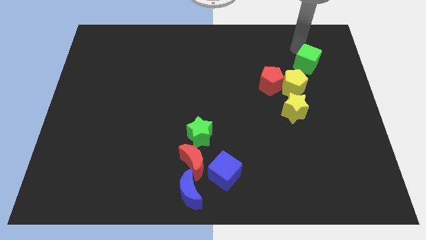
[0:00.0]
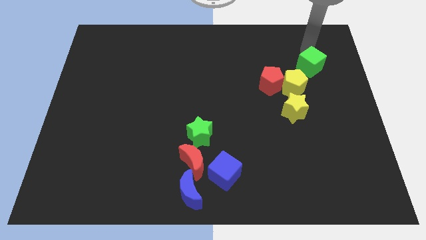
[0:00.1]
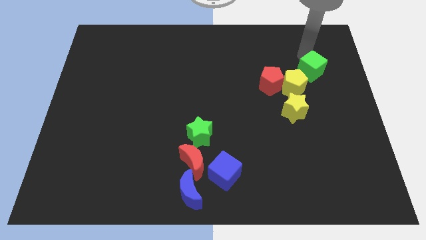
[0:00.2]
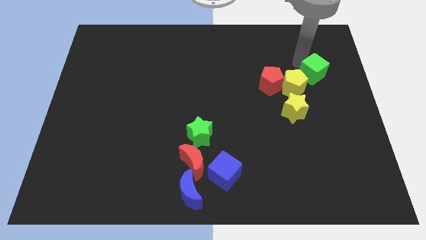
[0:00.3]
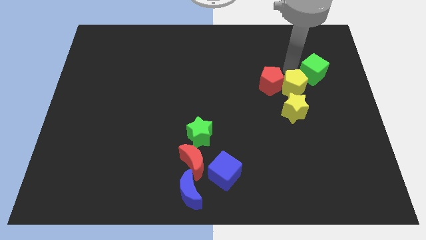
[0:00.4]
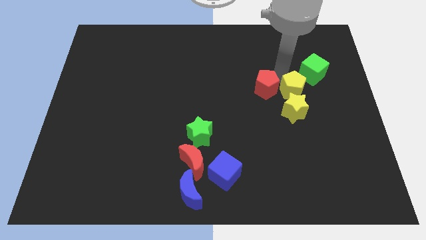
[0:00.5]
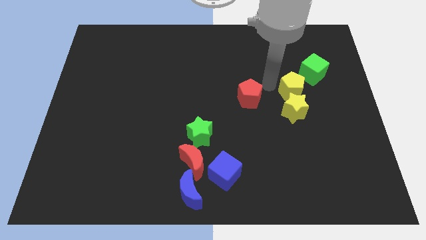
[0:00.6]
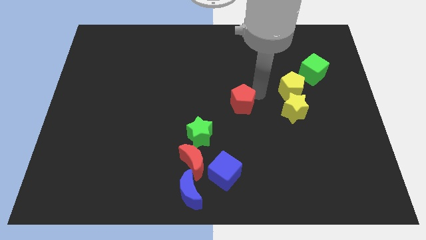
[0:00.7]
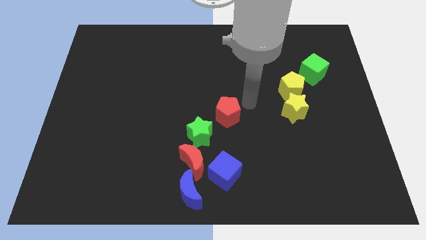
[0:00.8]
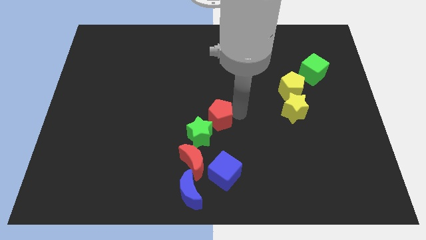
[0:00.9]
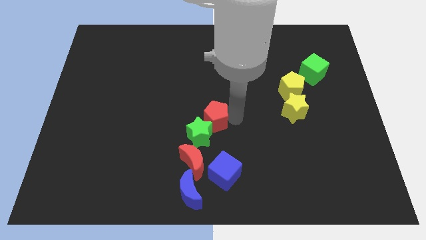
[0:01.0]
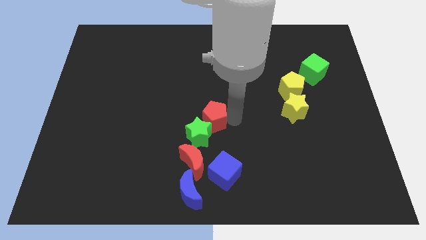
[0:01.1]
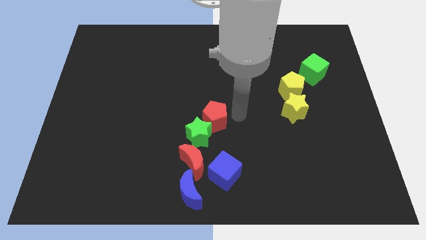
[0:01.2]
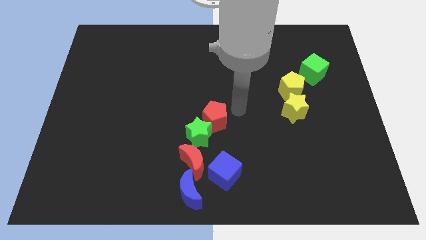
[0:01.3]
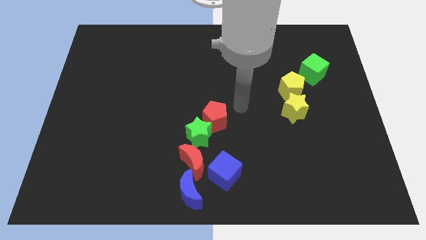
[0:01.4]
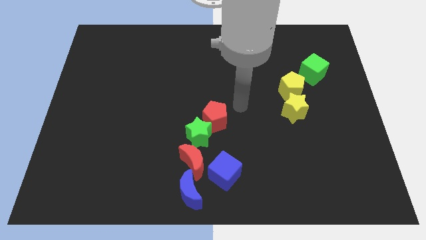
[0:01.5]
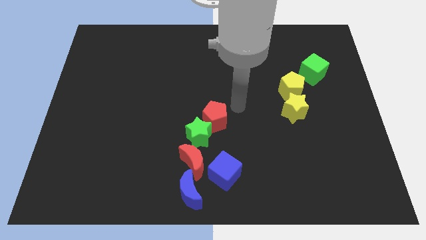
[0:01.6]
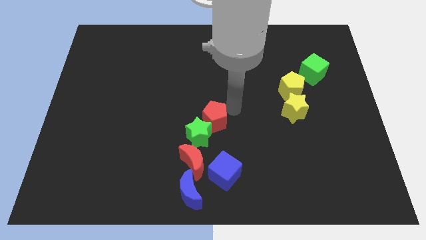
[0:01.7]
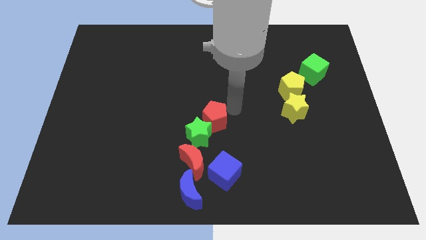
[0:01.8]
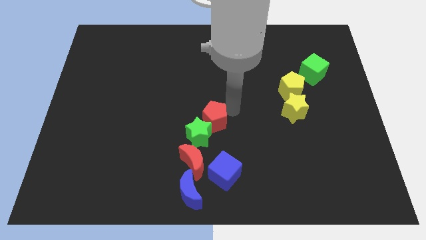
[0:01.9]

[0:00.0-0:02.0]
place the red pentagon at the top of the green star

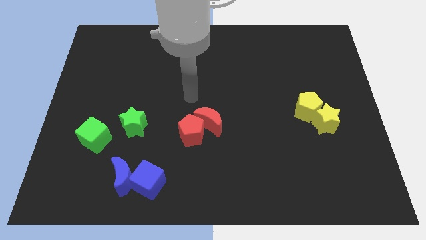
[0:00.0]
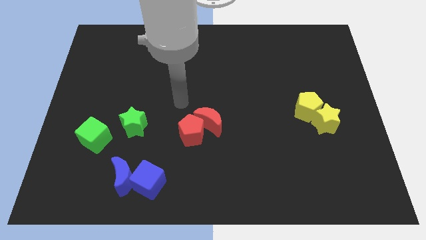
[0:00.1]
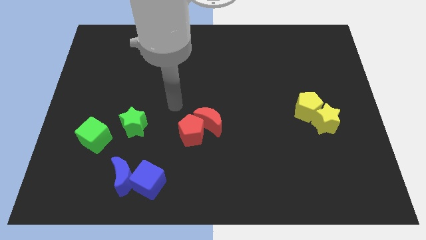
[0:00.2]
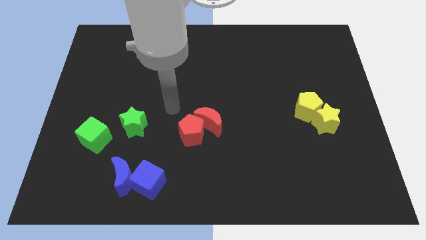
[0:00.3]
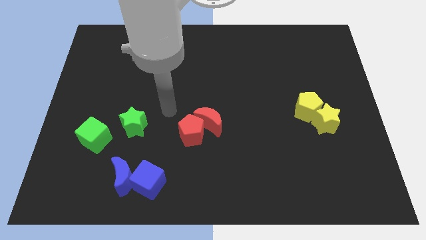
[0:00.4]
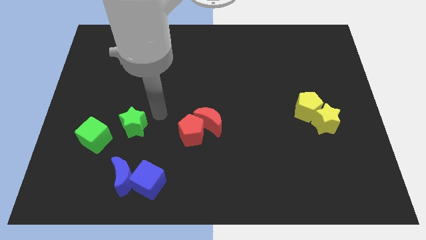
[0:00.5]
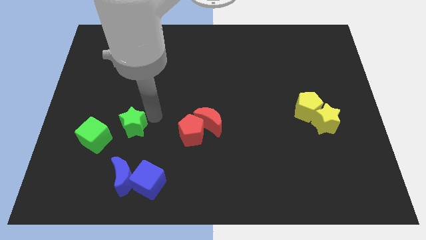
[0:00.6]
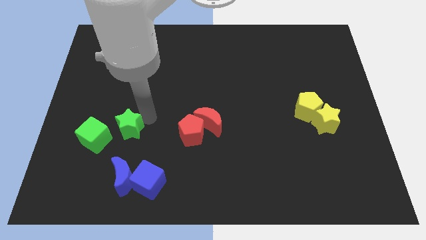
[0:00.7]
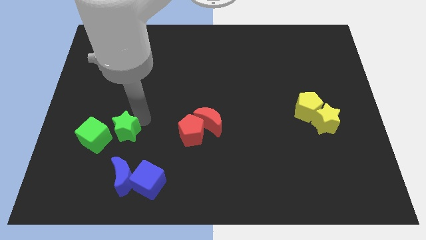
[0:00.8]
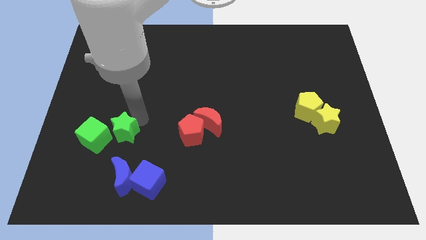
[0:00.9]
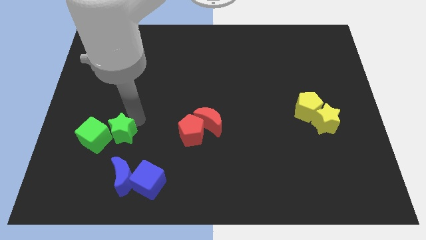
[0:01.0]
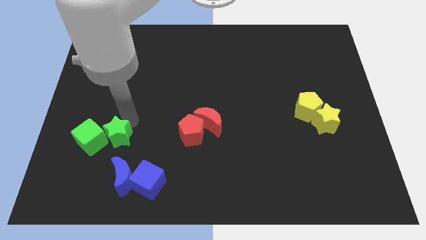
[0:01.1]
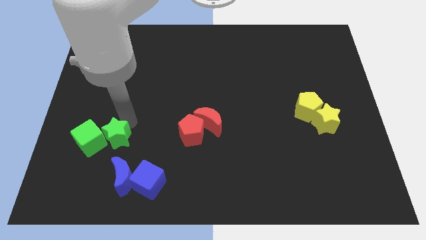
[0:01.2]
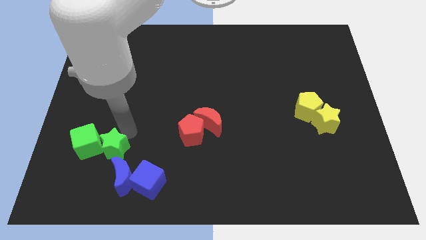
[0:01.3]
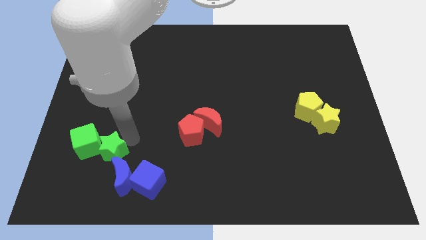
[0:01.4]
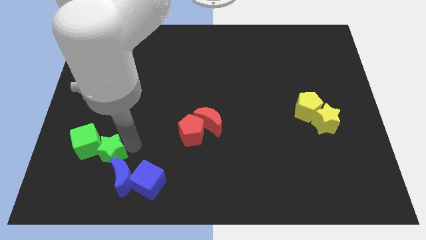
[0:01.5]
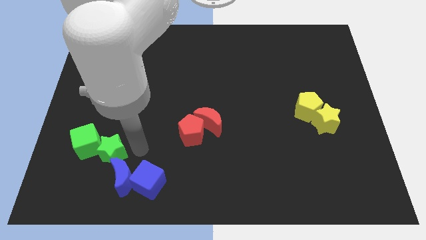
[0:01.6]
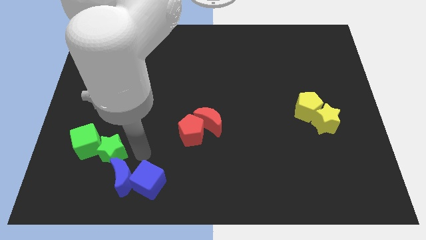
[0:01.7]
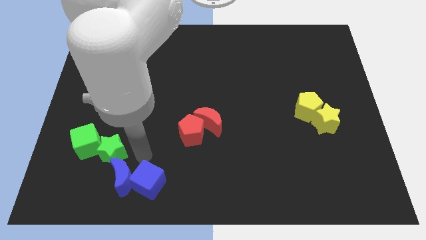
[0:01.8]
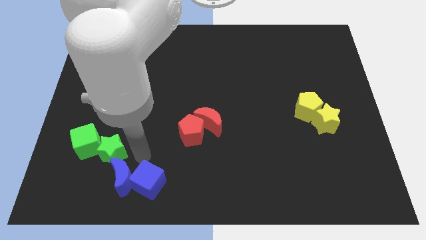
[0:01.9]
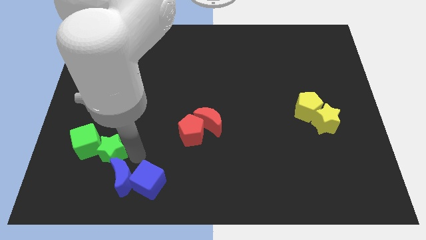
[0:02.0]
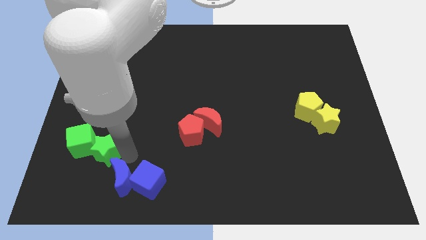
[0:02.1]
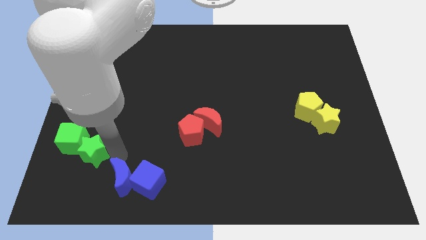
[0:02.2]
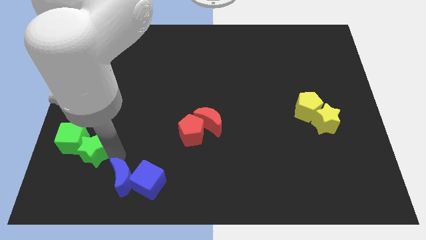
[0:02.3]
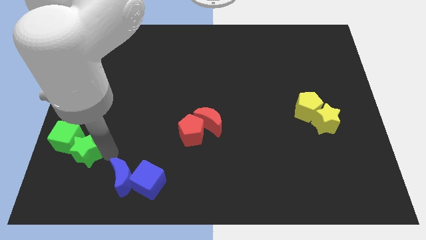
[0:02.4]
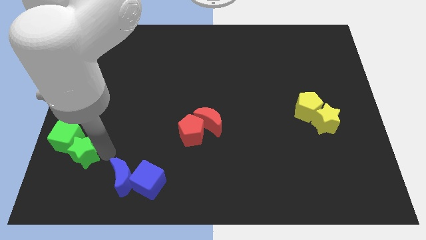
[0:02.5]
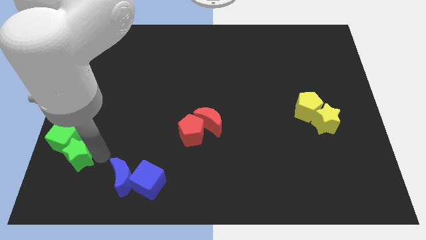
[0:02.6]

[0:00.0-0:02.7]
push the green star into green cube

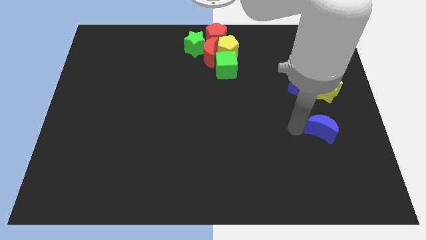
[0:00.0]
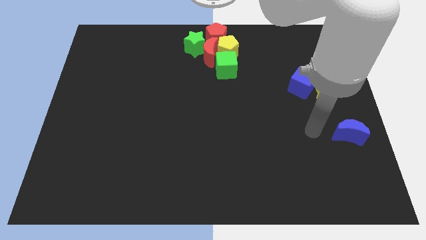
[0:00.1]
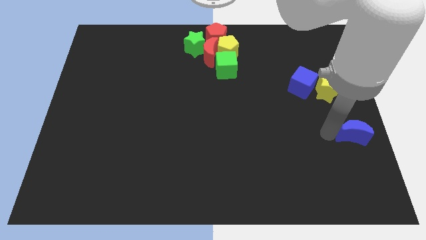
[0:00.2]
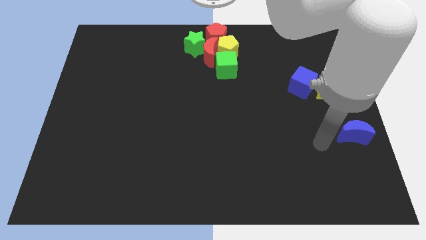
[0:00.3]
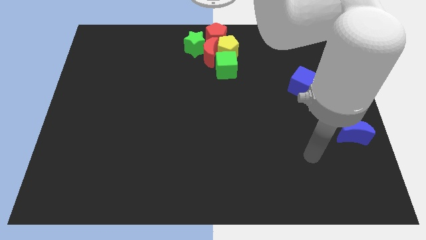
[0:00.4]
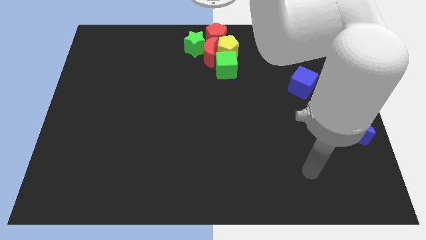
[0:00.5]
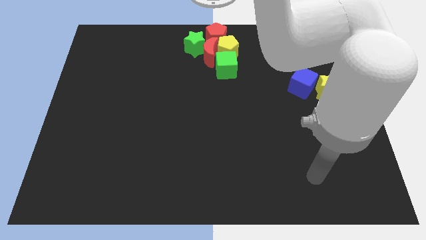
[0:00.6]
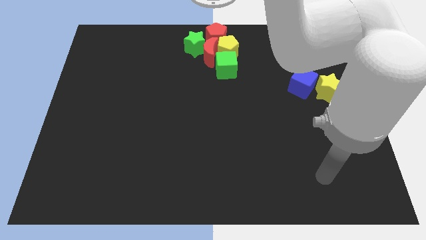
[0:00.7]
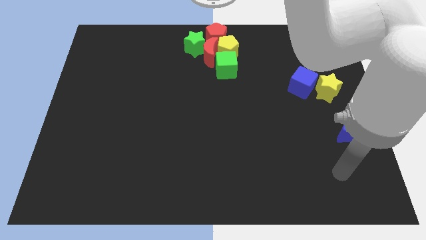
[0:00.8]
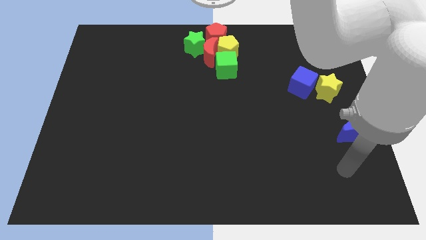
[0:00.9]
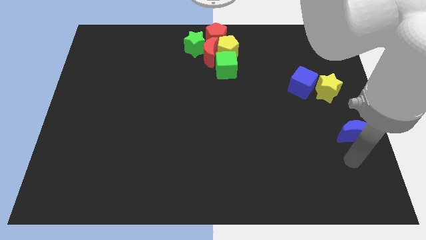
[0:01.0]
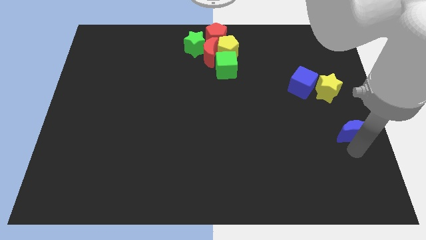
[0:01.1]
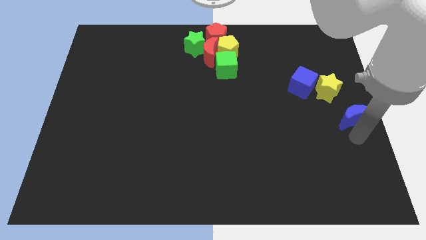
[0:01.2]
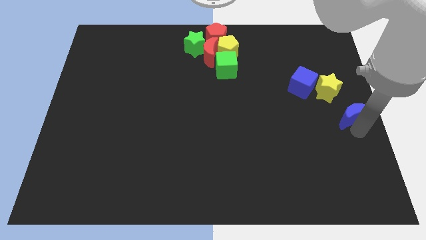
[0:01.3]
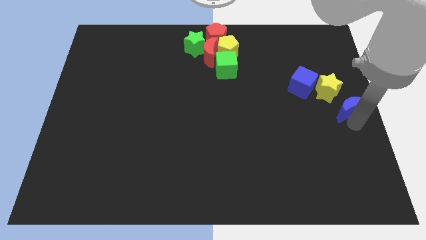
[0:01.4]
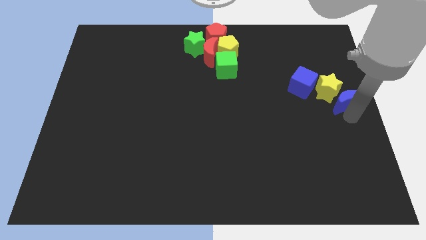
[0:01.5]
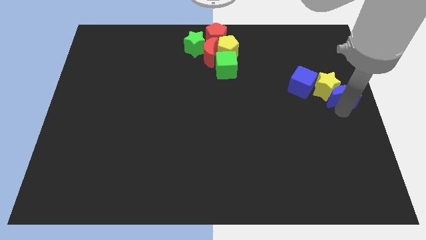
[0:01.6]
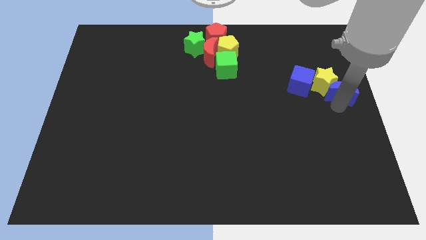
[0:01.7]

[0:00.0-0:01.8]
move the blue moon into the bottom right side of the yellow star

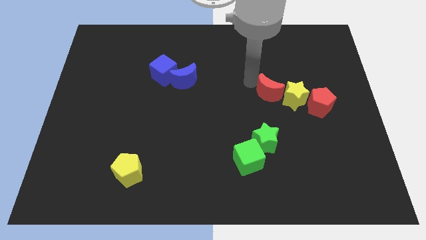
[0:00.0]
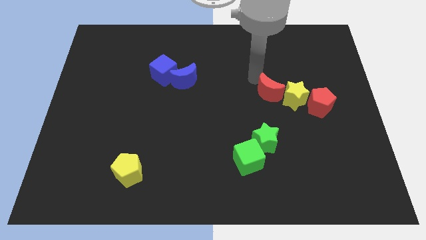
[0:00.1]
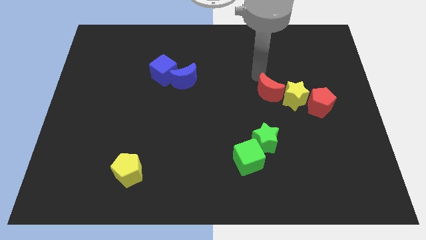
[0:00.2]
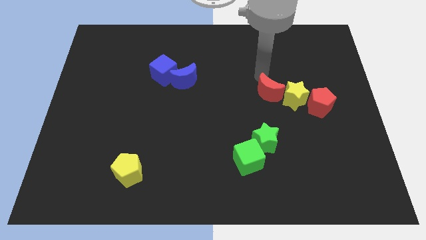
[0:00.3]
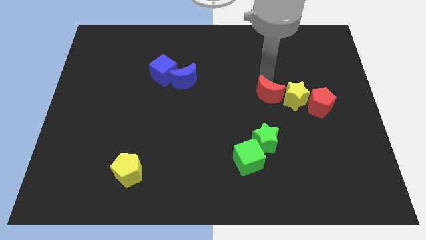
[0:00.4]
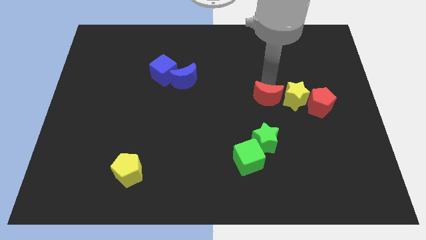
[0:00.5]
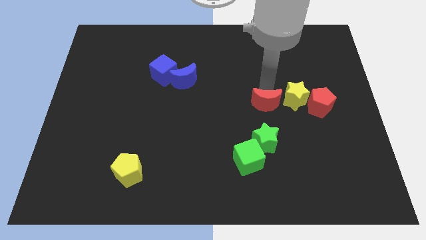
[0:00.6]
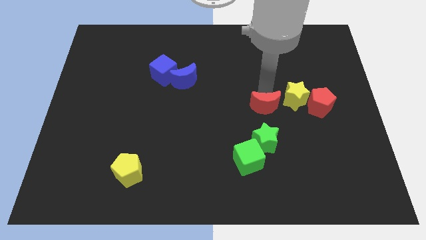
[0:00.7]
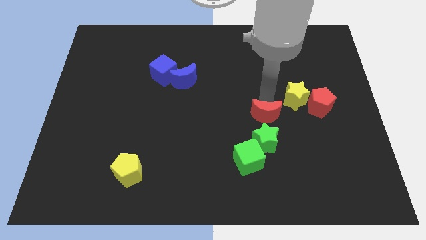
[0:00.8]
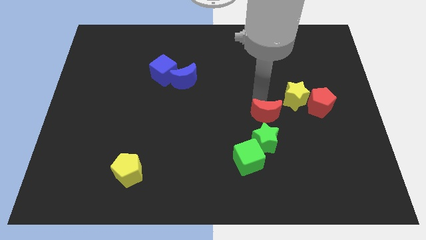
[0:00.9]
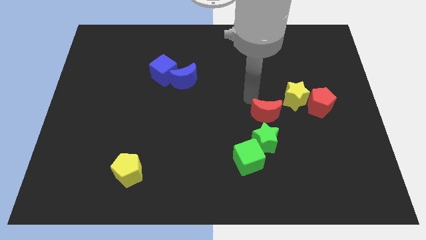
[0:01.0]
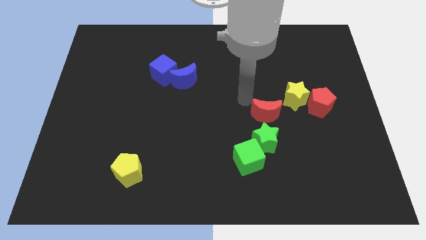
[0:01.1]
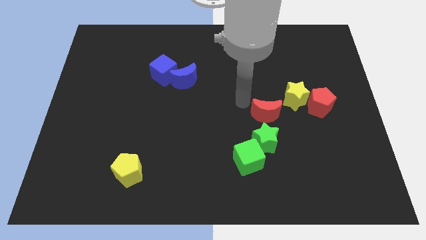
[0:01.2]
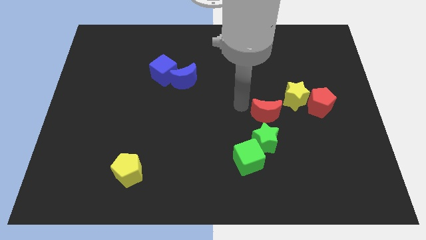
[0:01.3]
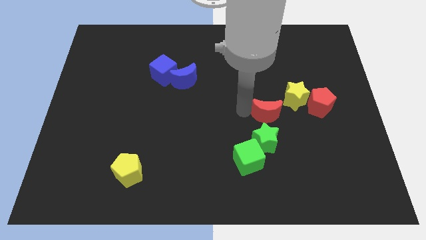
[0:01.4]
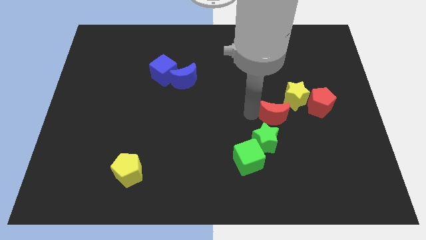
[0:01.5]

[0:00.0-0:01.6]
move red crescent towards the green star

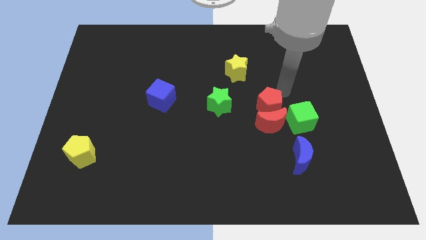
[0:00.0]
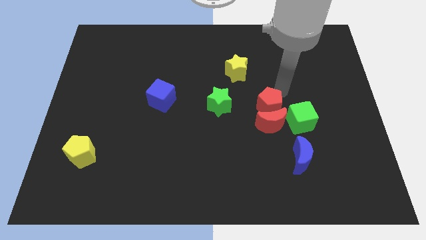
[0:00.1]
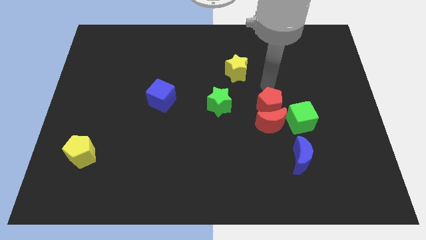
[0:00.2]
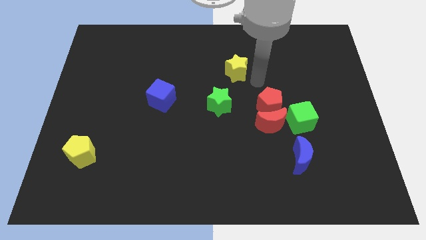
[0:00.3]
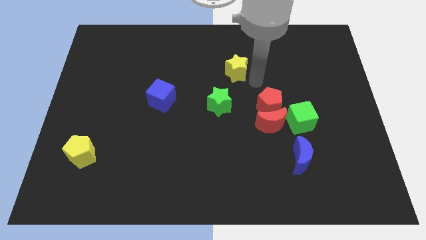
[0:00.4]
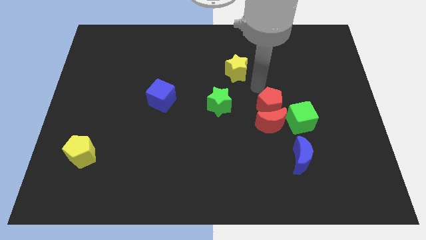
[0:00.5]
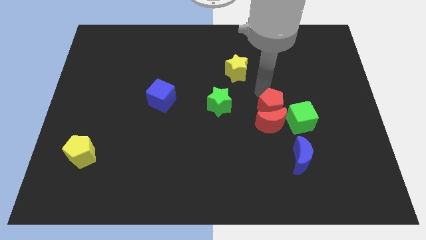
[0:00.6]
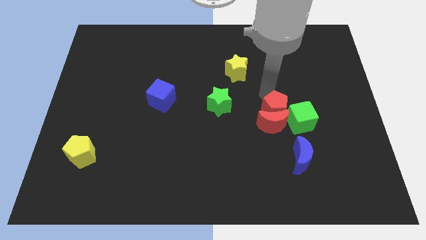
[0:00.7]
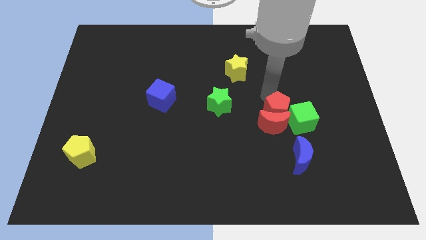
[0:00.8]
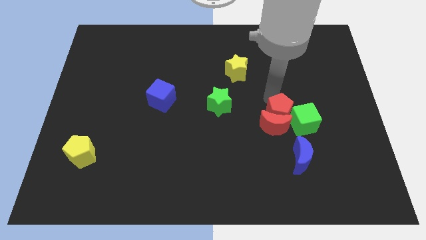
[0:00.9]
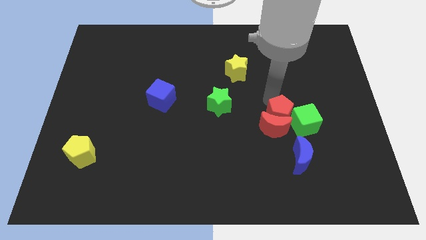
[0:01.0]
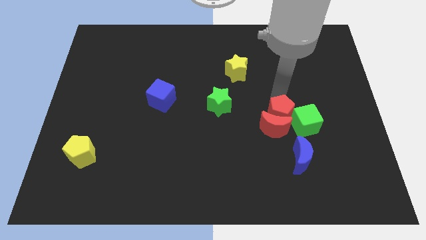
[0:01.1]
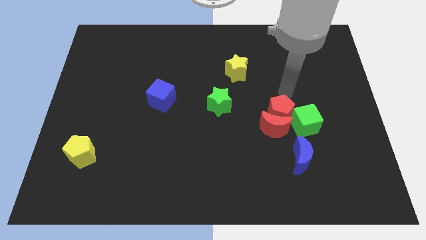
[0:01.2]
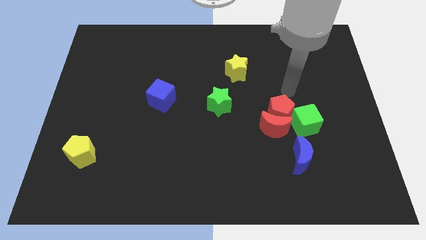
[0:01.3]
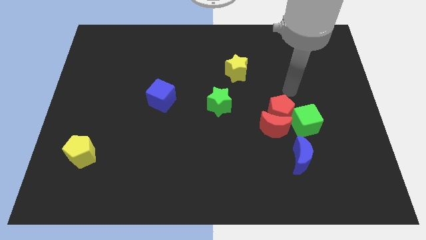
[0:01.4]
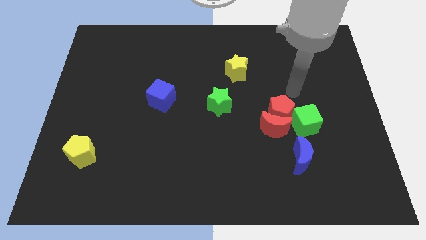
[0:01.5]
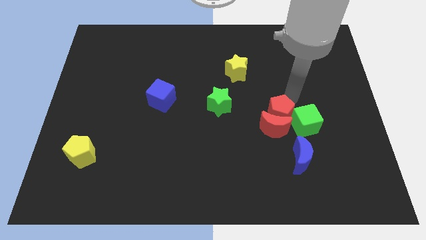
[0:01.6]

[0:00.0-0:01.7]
push the red pentagon into the red crescent
